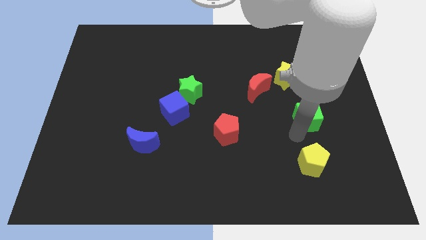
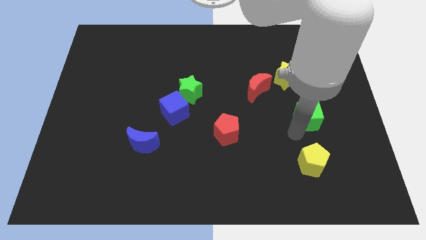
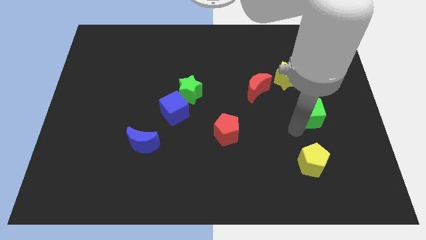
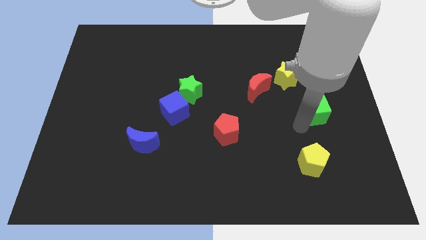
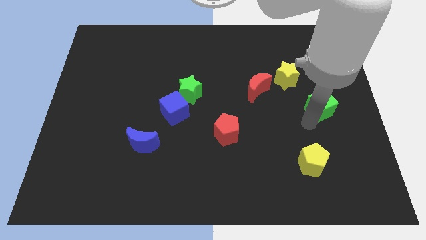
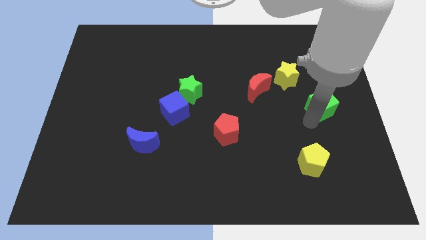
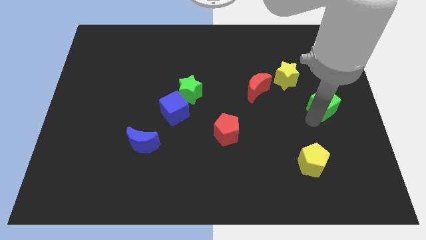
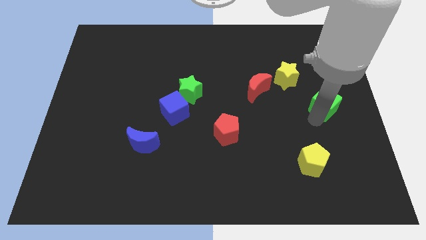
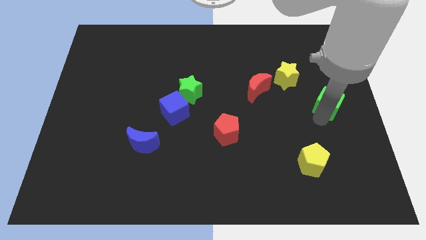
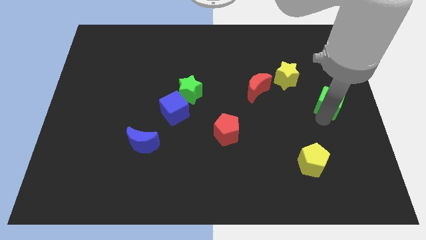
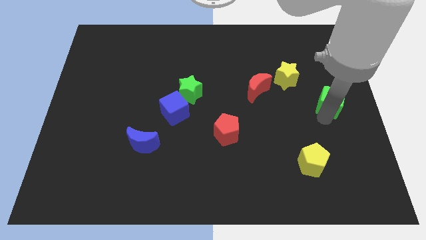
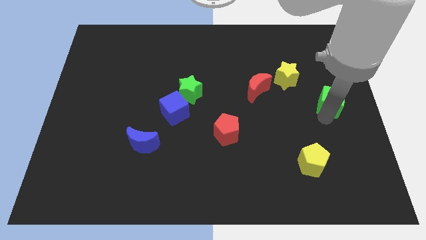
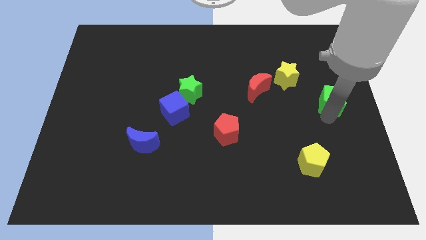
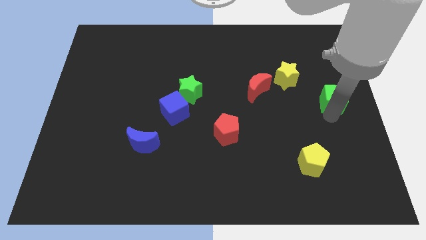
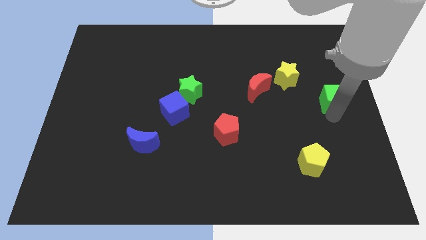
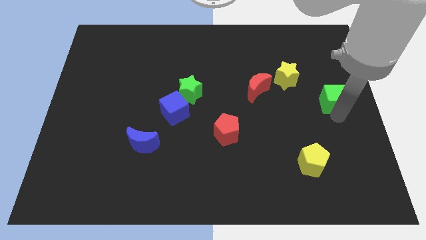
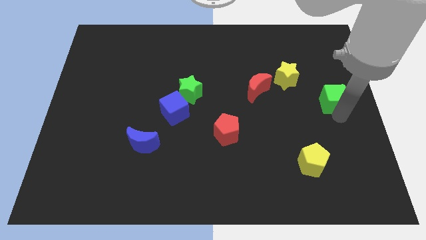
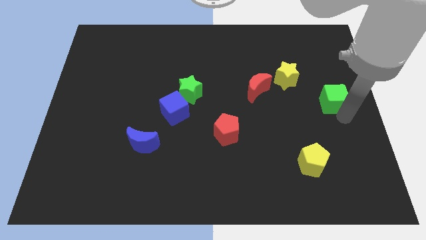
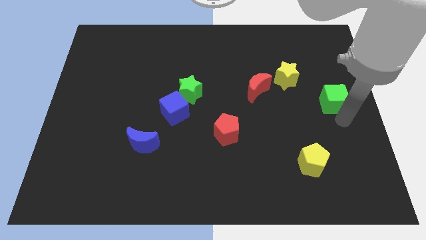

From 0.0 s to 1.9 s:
move the green cube towards the right center

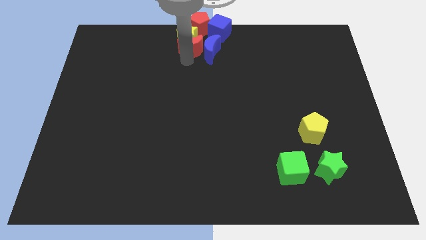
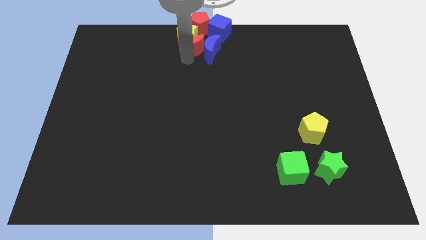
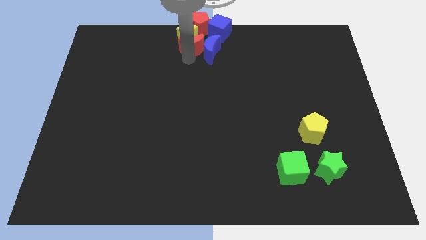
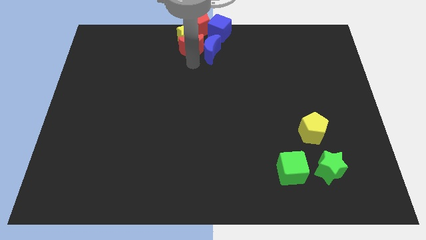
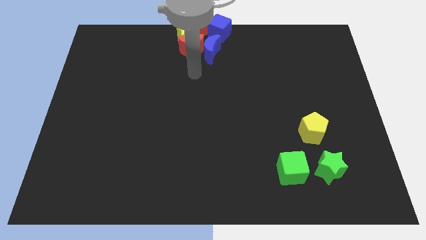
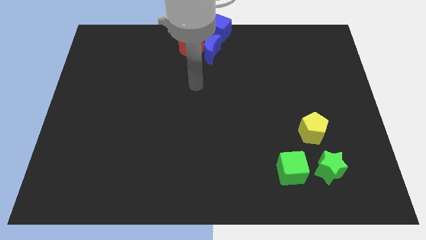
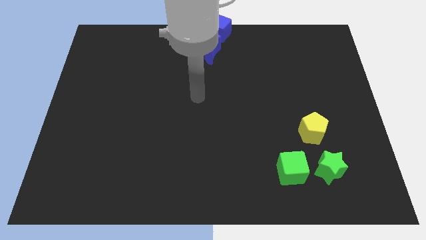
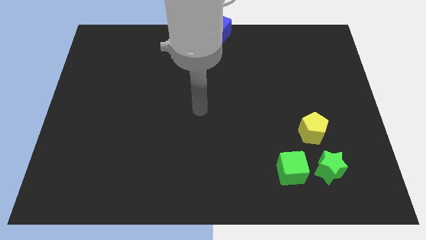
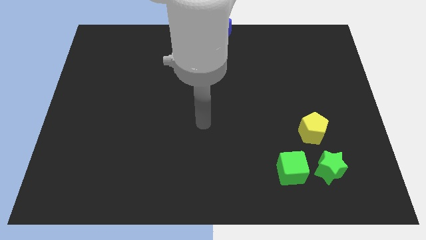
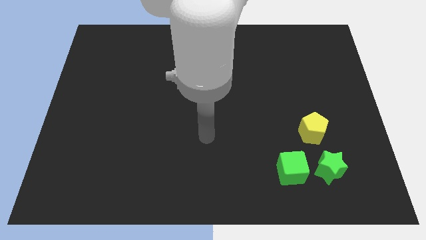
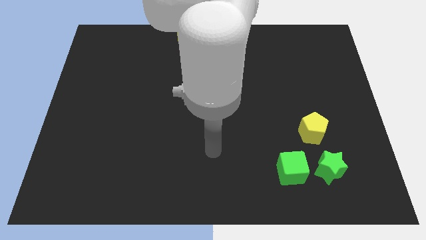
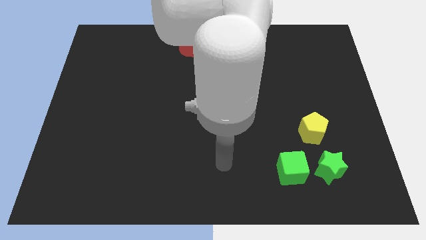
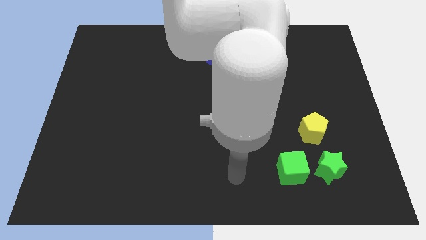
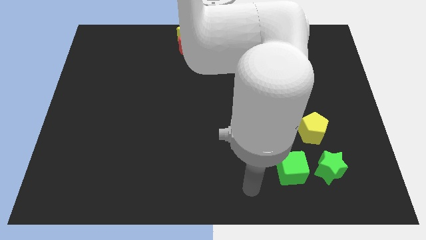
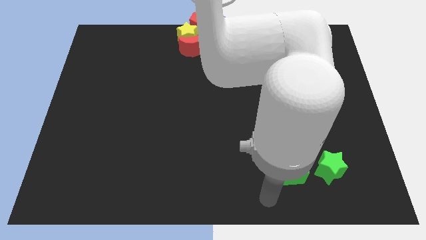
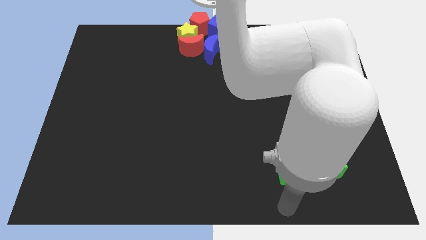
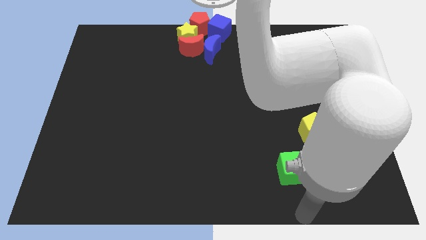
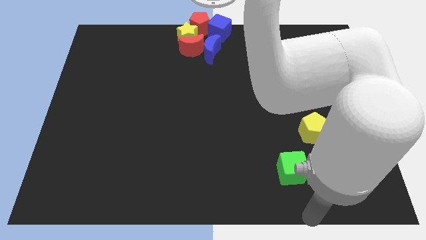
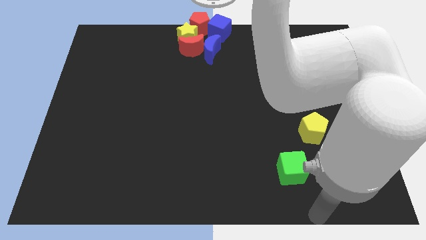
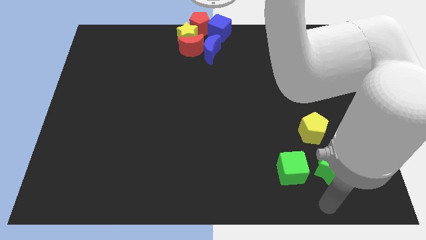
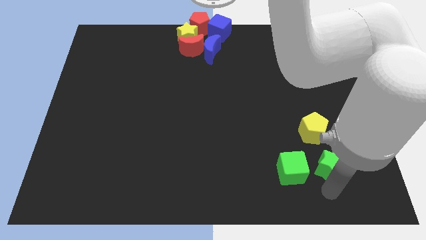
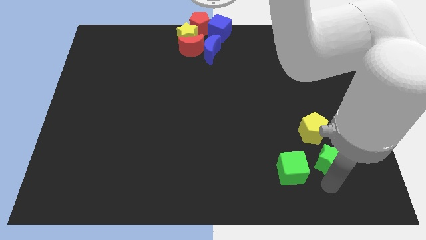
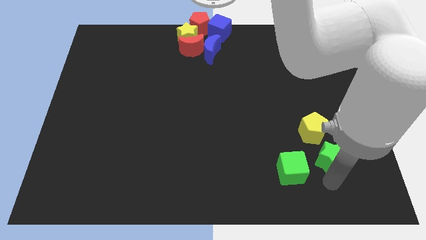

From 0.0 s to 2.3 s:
touch the bottom of green star

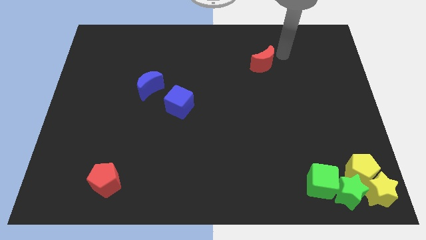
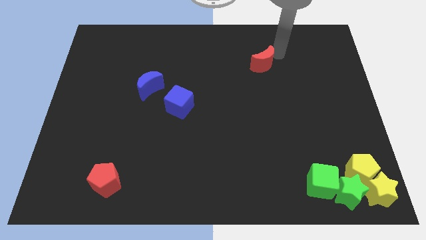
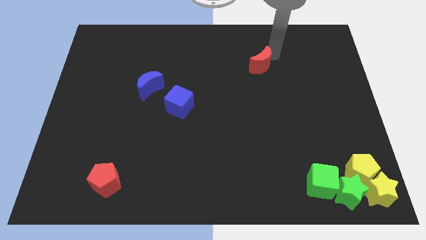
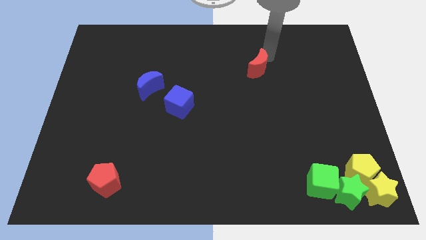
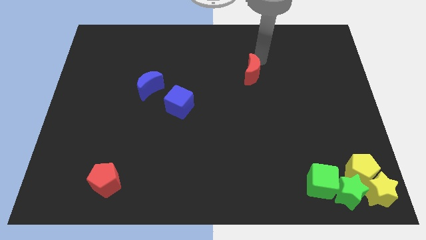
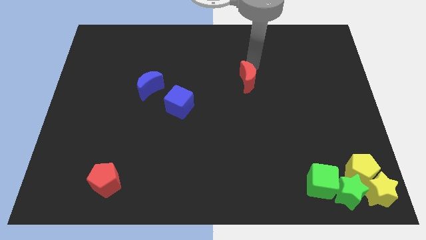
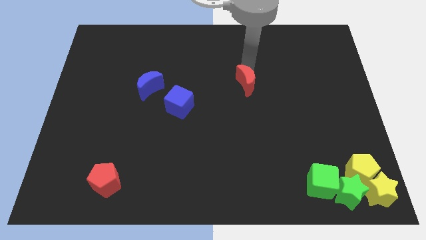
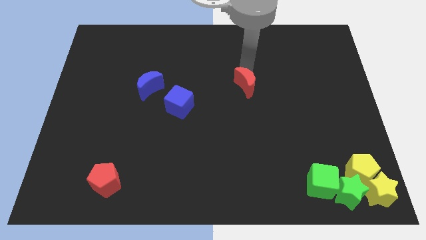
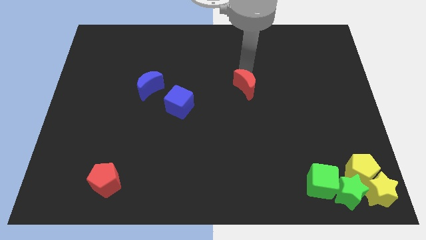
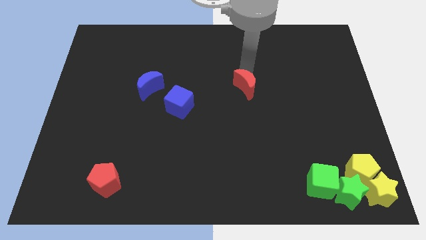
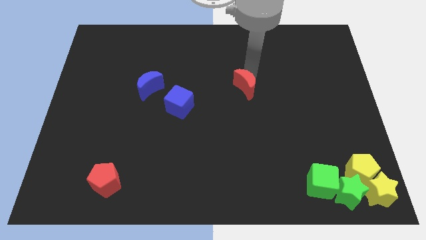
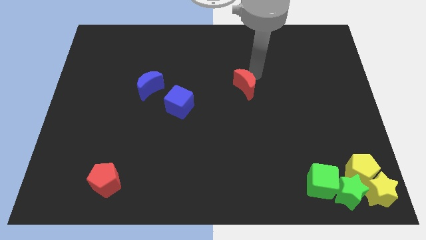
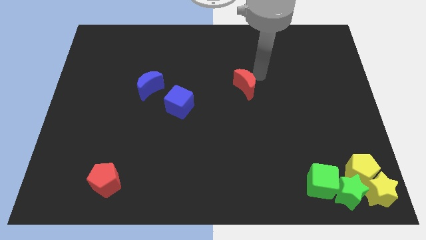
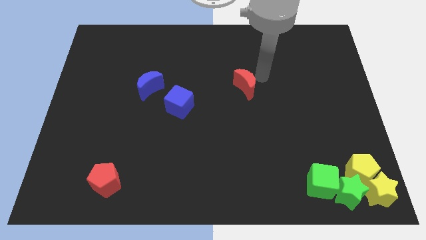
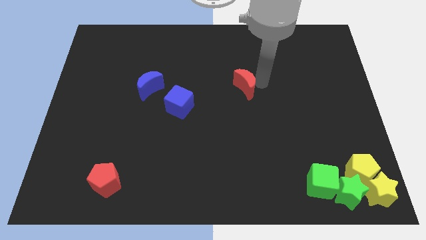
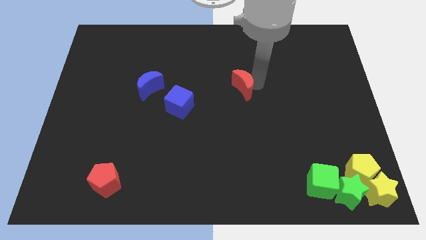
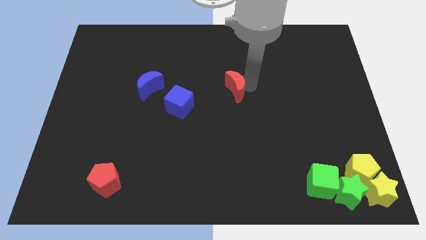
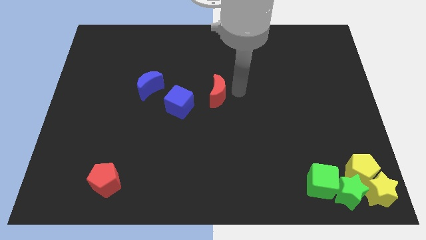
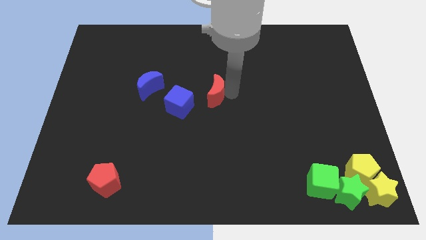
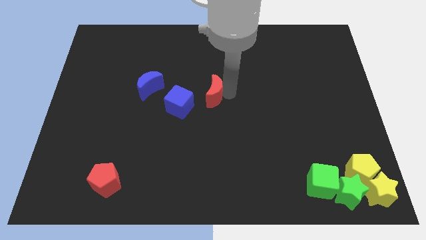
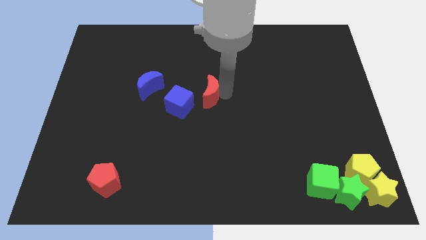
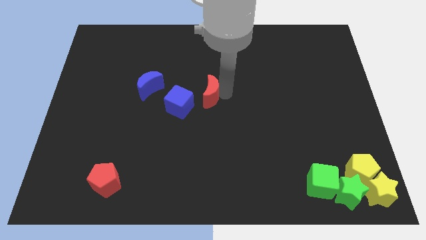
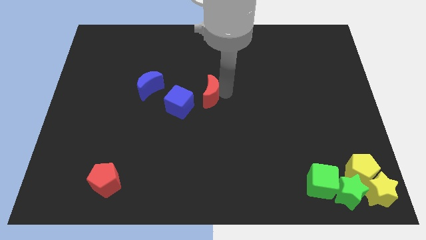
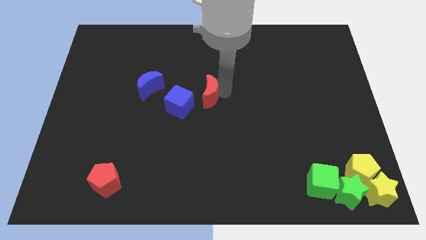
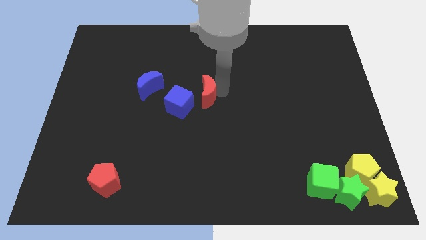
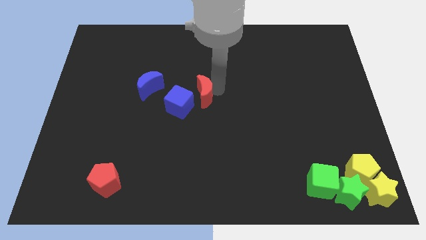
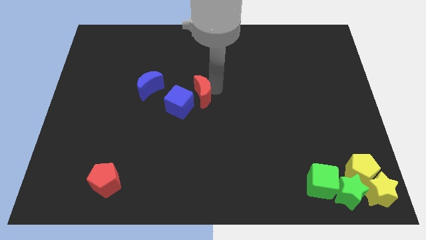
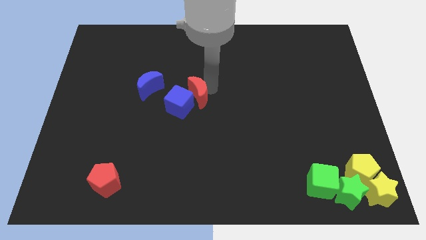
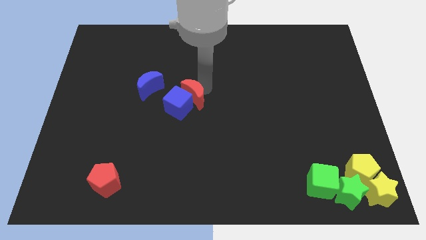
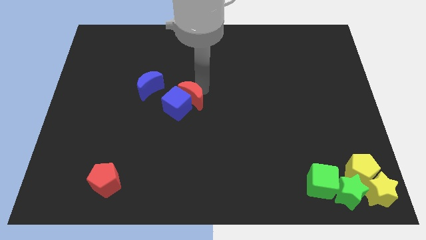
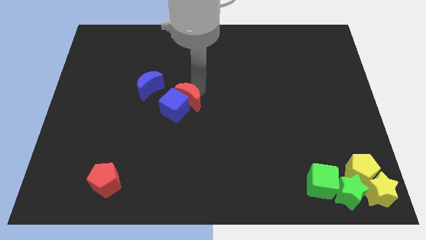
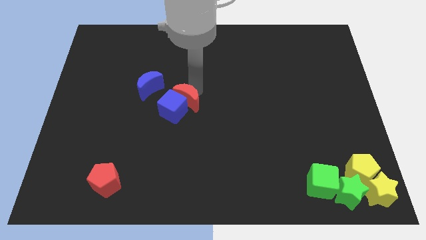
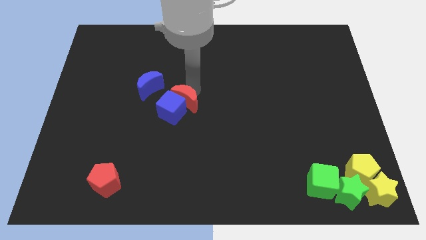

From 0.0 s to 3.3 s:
push the red moon into the blue cube

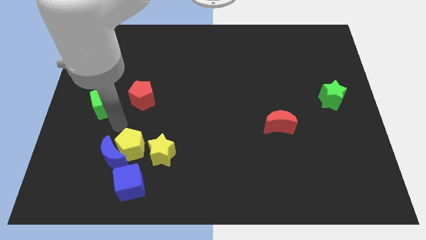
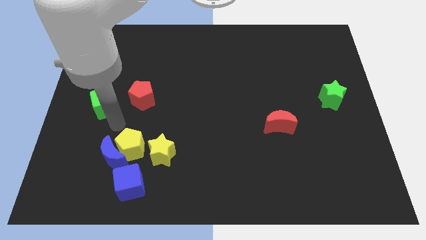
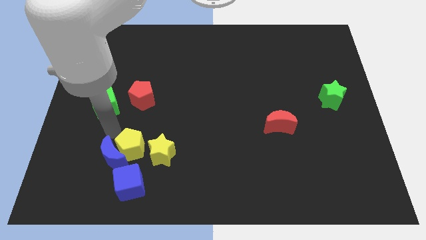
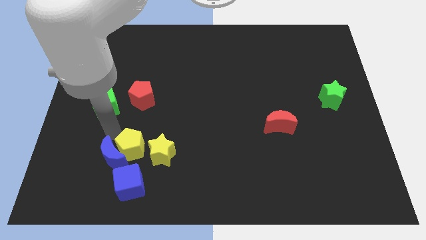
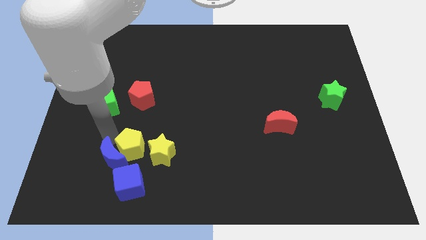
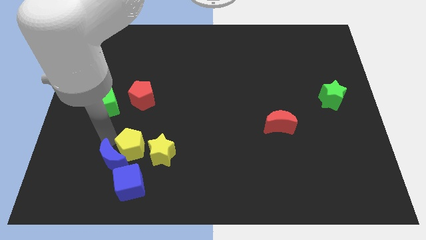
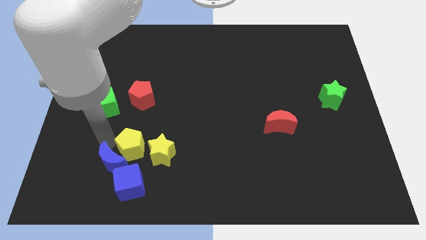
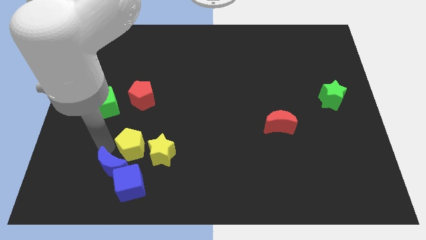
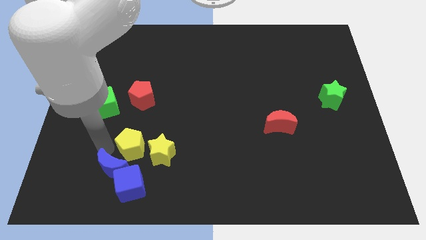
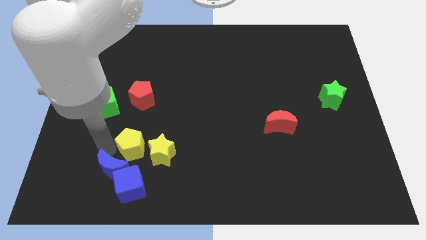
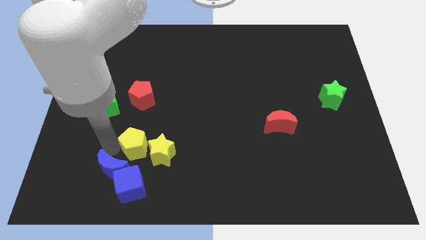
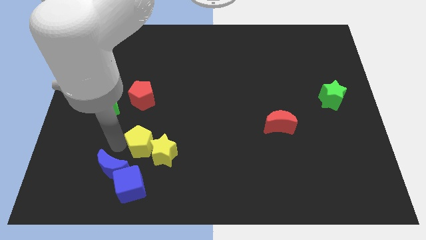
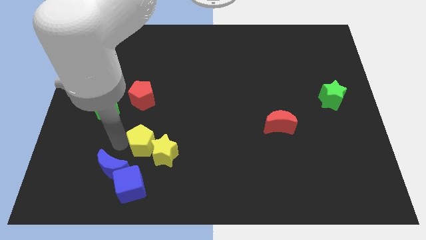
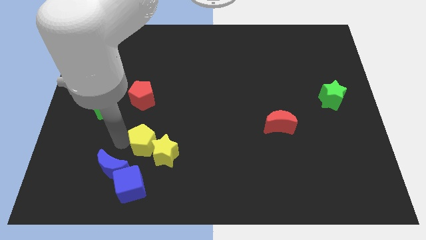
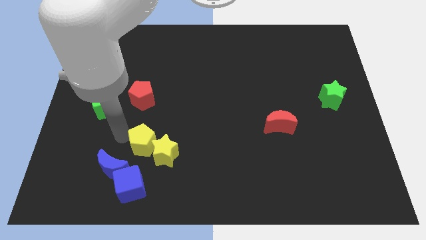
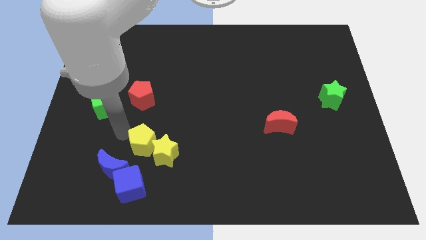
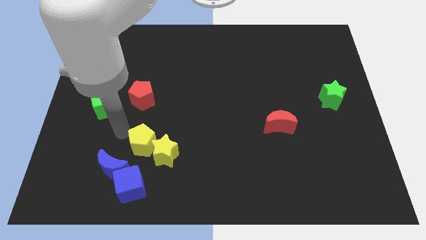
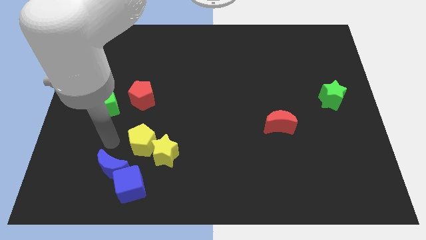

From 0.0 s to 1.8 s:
separate the yellow blocks and the blue blocks
